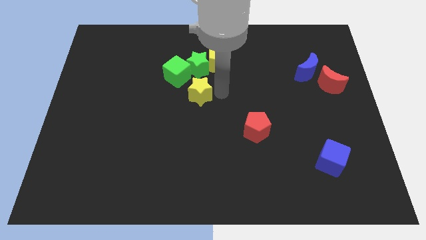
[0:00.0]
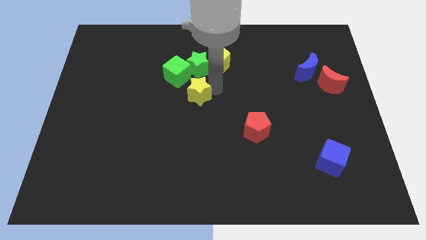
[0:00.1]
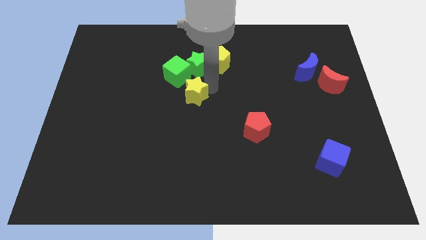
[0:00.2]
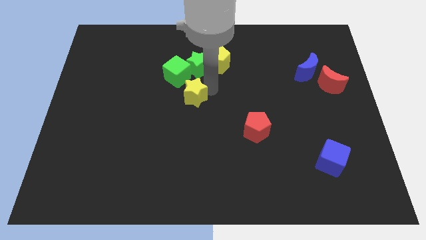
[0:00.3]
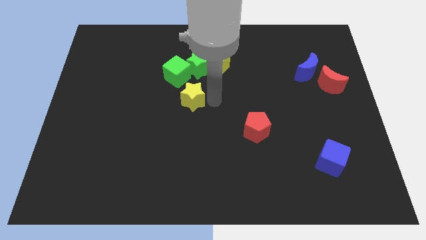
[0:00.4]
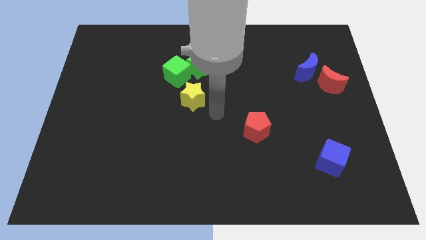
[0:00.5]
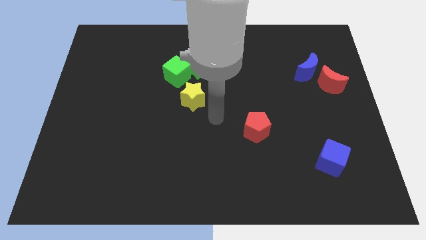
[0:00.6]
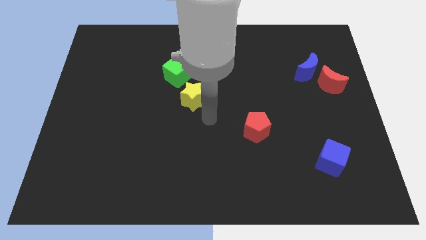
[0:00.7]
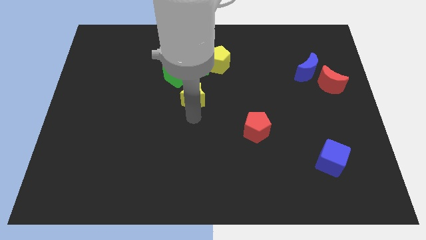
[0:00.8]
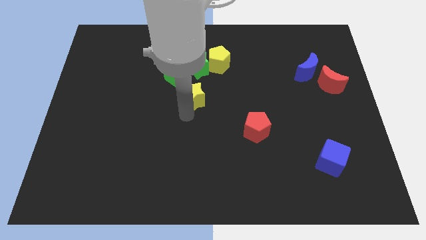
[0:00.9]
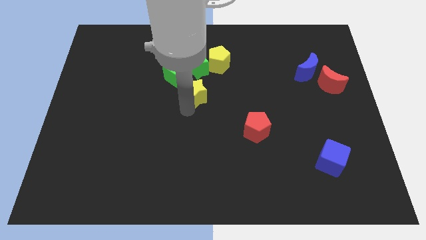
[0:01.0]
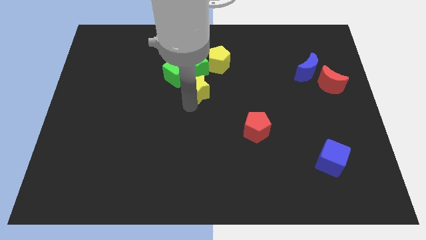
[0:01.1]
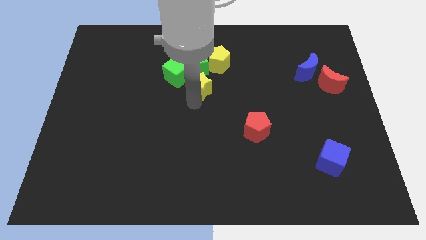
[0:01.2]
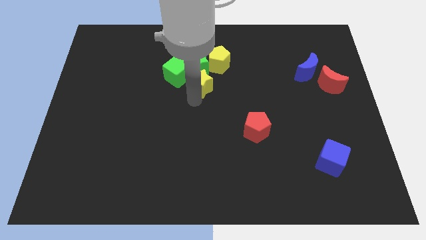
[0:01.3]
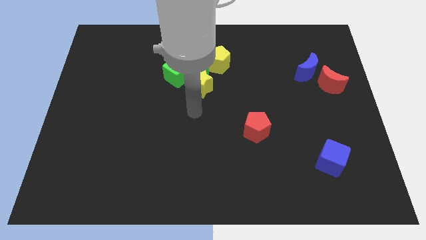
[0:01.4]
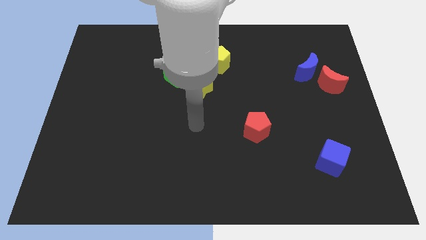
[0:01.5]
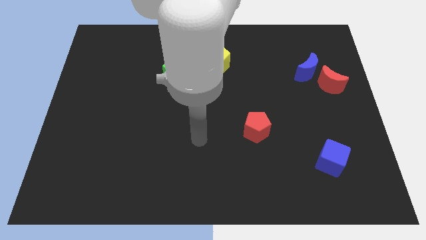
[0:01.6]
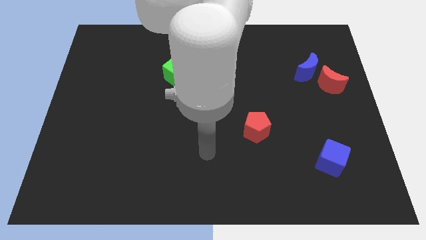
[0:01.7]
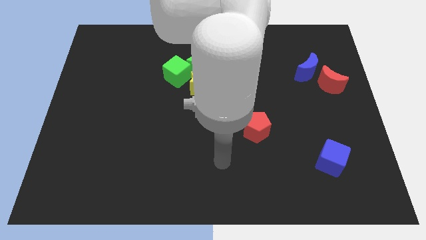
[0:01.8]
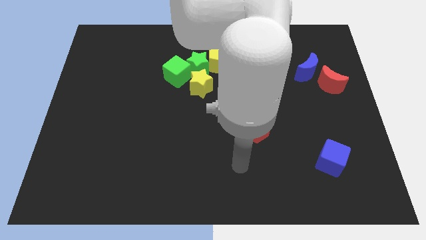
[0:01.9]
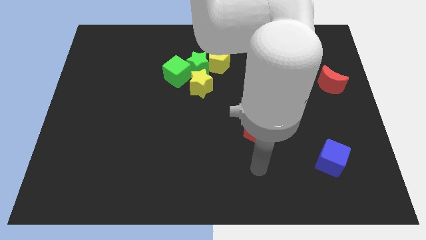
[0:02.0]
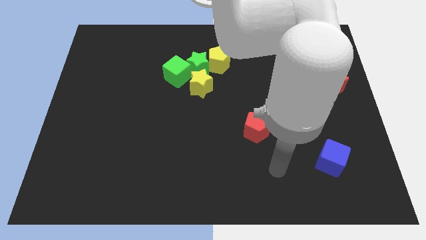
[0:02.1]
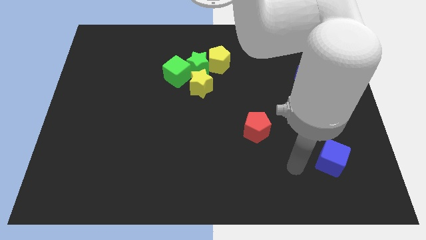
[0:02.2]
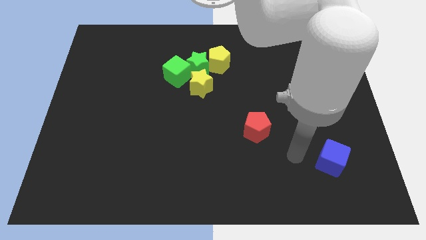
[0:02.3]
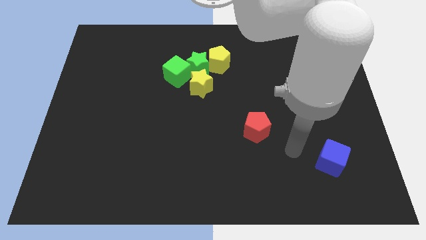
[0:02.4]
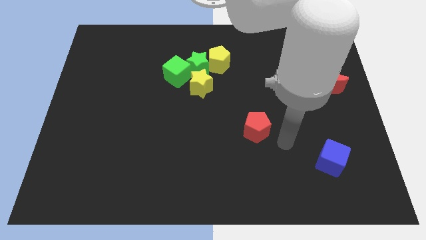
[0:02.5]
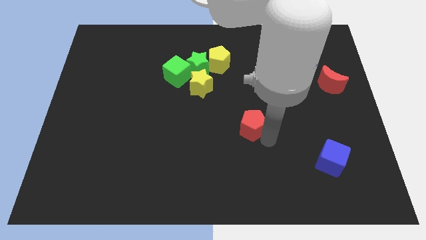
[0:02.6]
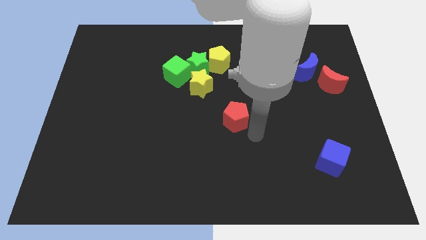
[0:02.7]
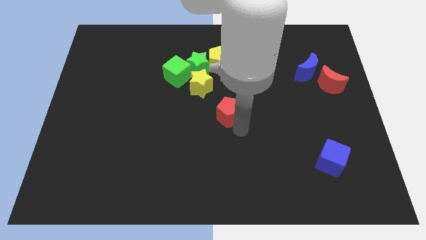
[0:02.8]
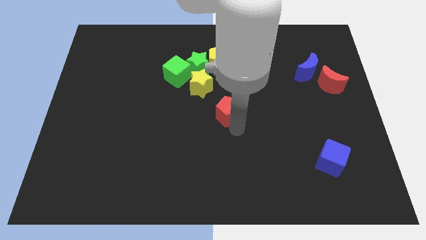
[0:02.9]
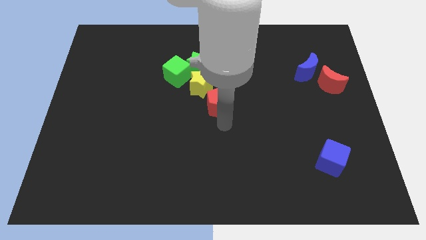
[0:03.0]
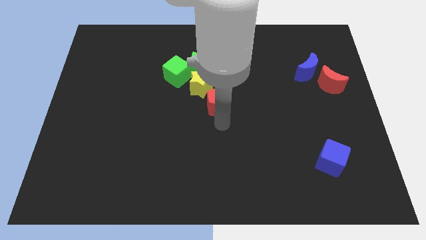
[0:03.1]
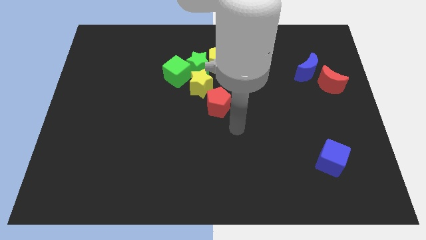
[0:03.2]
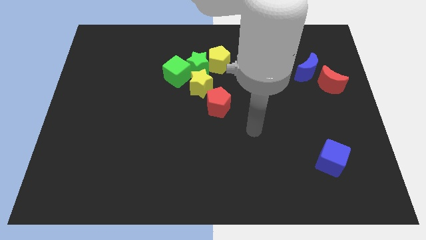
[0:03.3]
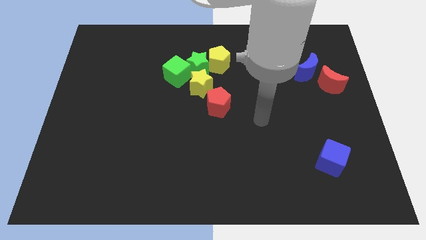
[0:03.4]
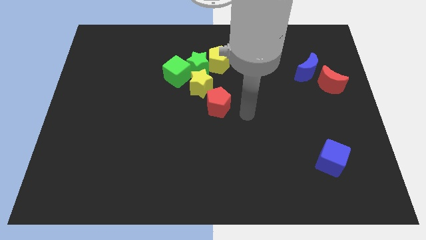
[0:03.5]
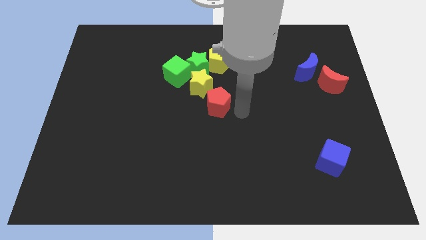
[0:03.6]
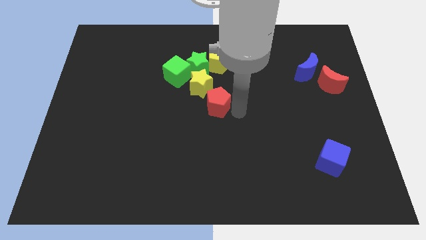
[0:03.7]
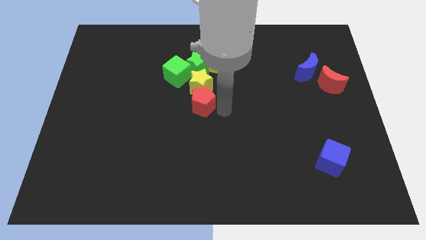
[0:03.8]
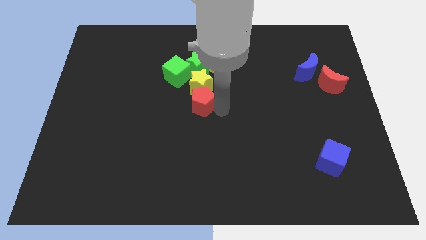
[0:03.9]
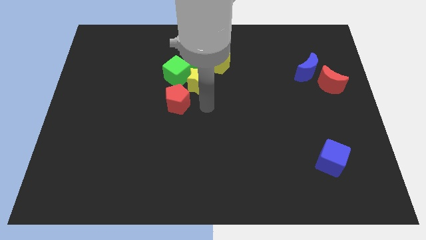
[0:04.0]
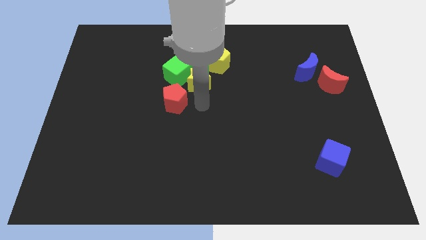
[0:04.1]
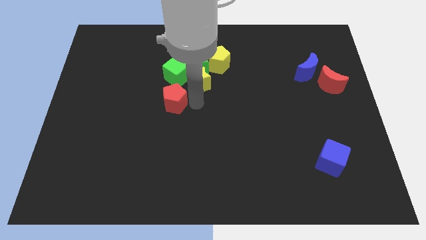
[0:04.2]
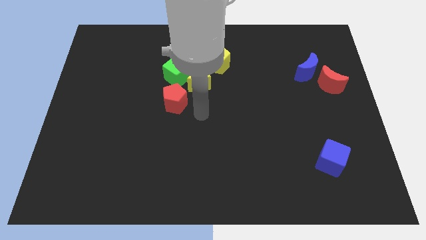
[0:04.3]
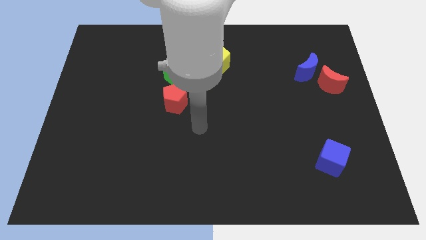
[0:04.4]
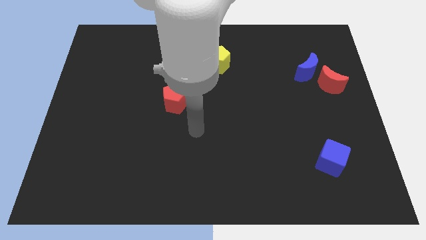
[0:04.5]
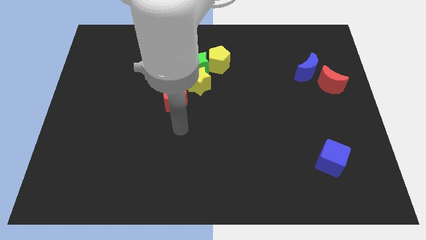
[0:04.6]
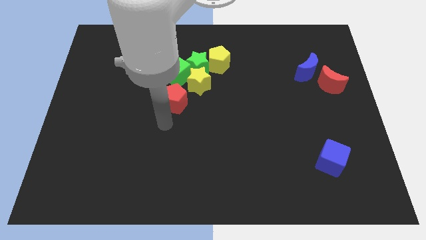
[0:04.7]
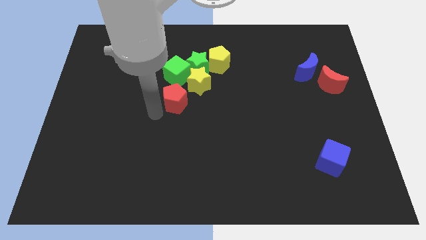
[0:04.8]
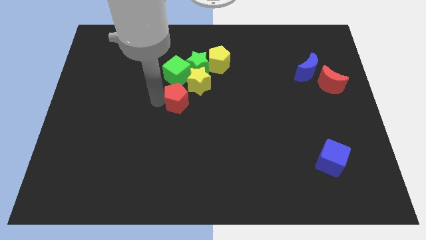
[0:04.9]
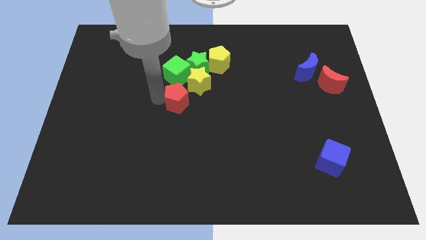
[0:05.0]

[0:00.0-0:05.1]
move the red pentagon to the left of the yellow star

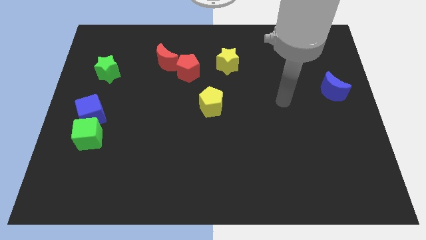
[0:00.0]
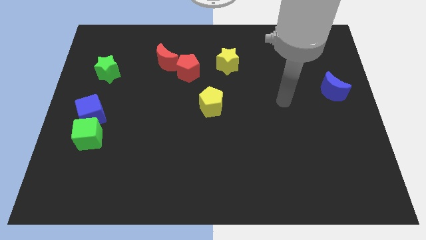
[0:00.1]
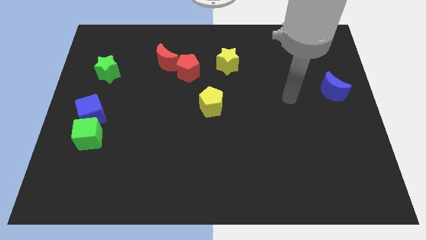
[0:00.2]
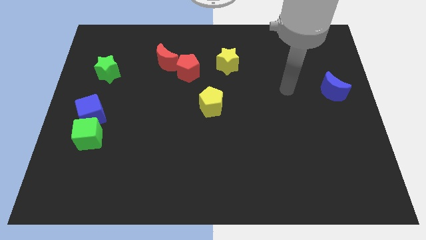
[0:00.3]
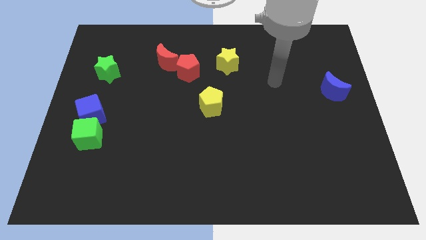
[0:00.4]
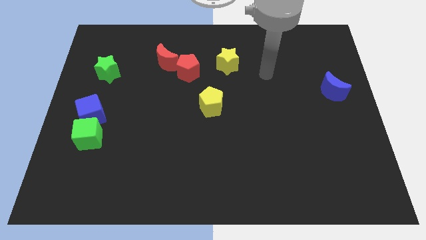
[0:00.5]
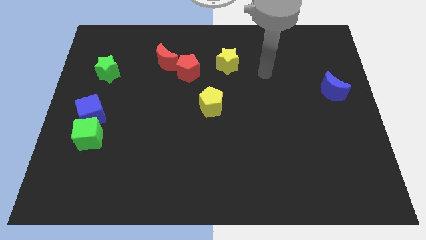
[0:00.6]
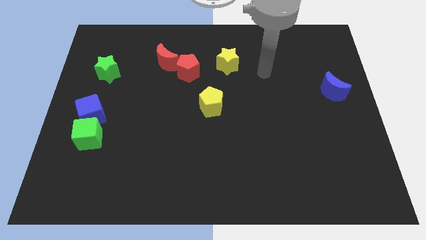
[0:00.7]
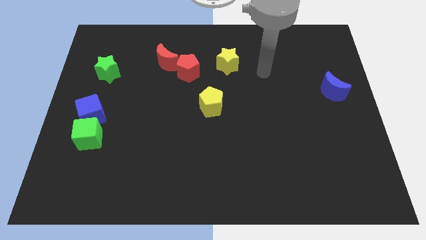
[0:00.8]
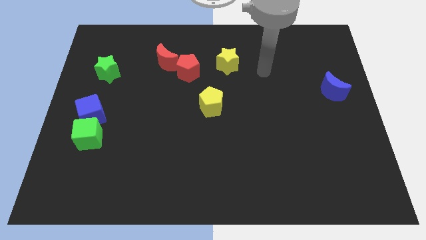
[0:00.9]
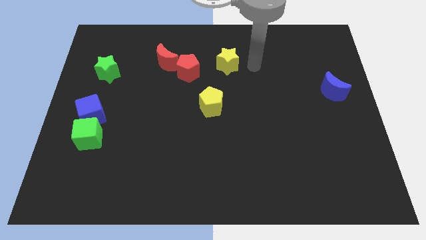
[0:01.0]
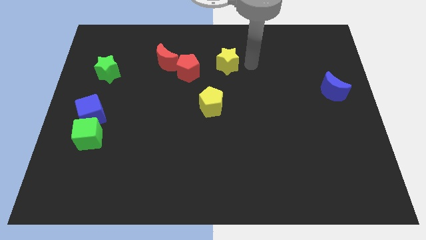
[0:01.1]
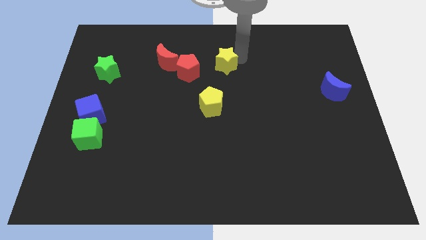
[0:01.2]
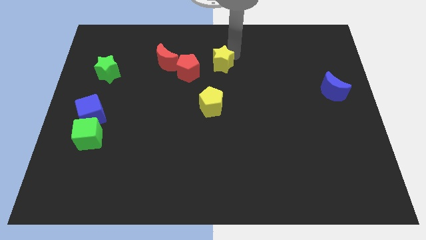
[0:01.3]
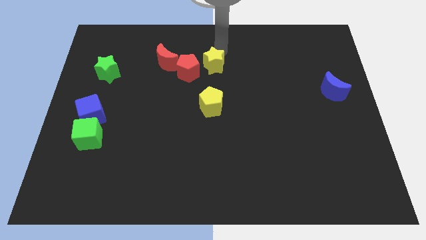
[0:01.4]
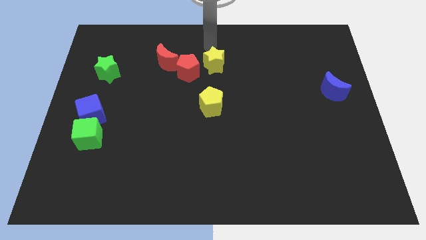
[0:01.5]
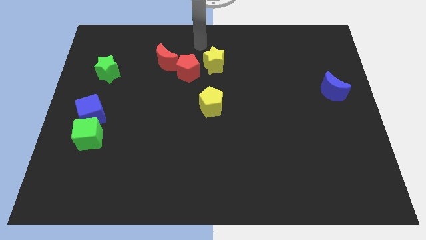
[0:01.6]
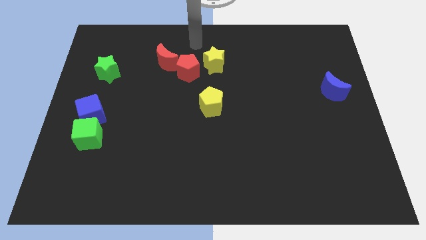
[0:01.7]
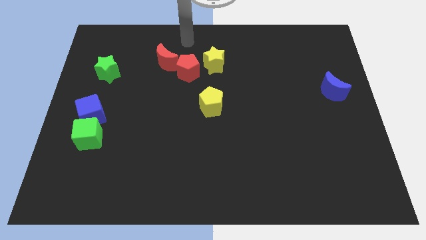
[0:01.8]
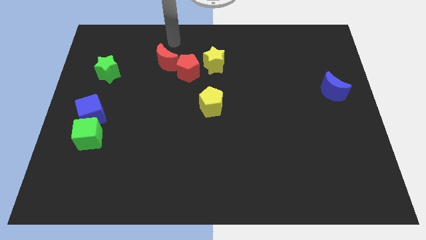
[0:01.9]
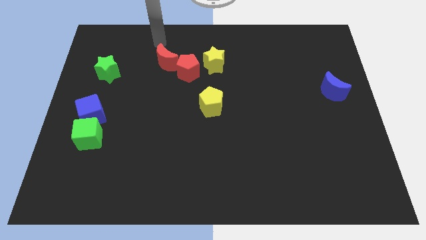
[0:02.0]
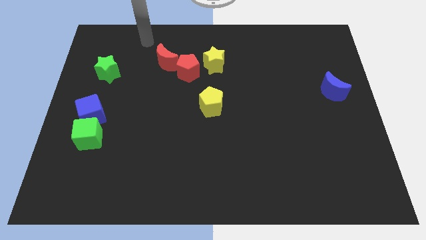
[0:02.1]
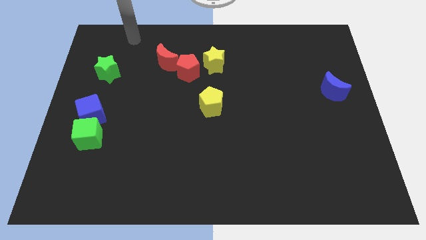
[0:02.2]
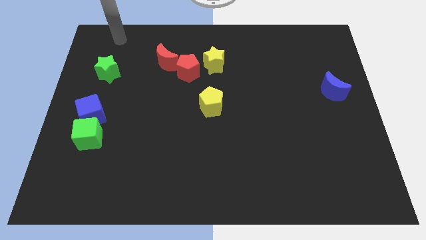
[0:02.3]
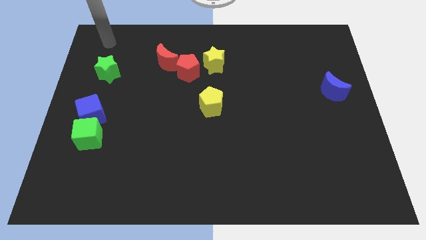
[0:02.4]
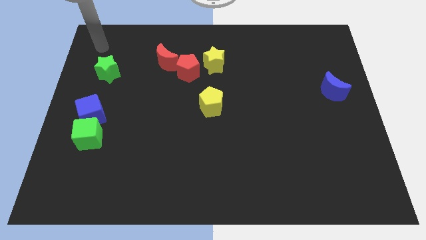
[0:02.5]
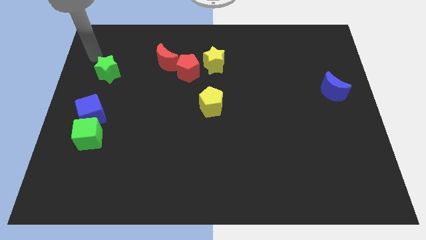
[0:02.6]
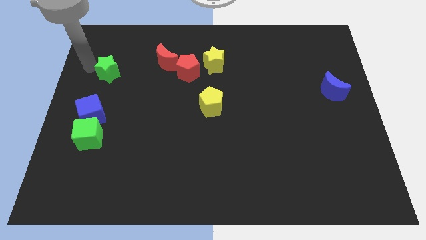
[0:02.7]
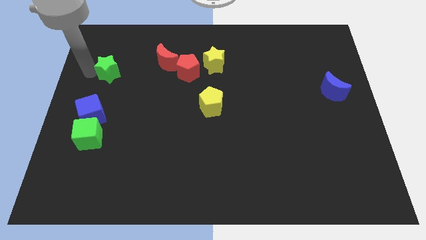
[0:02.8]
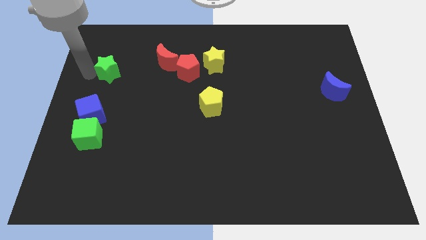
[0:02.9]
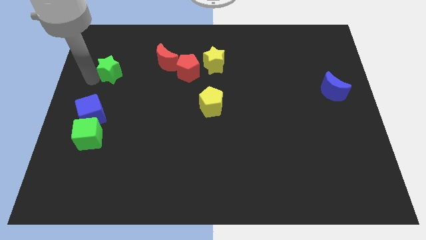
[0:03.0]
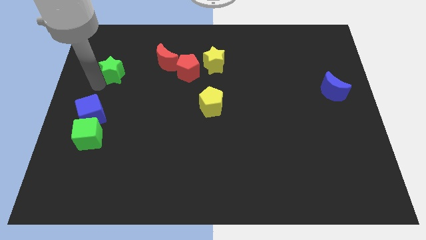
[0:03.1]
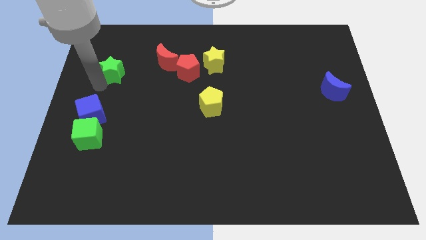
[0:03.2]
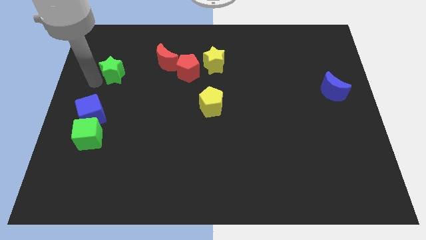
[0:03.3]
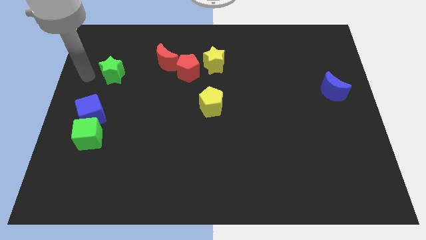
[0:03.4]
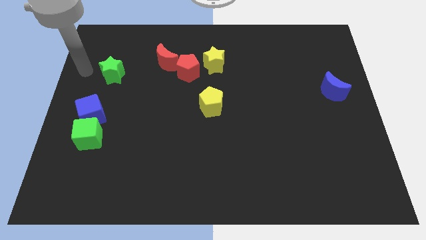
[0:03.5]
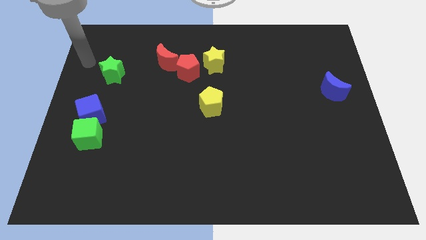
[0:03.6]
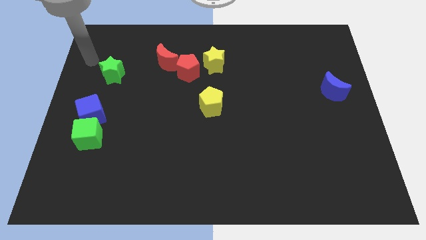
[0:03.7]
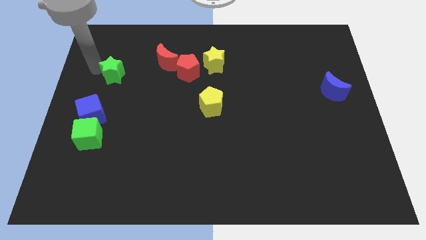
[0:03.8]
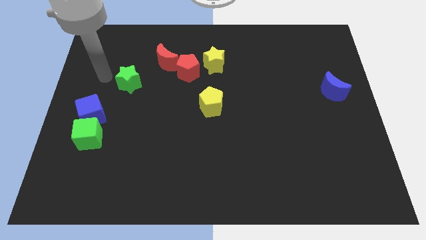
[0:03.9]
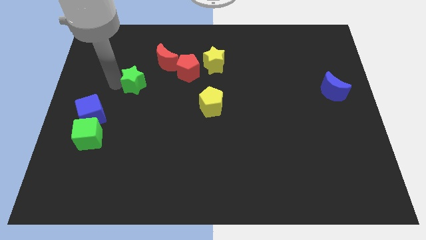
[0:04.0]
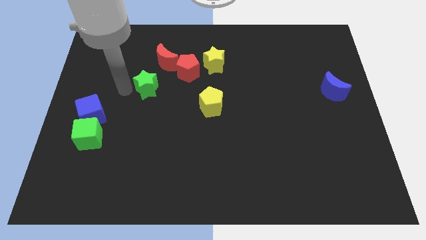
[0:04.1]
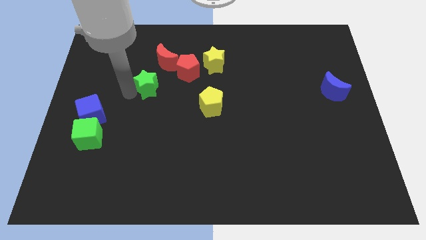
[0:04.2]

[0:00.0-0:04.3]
move green star diagonally to the top left of the yellow block
